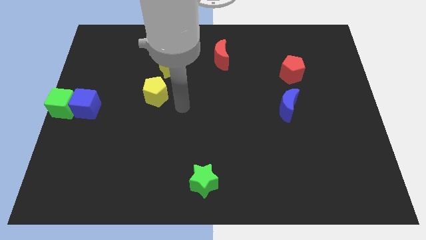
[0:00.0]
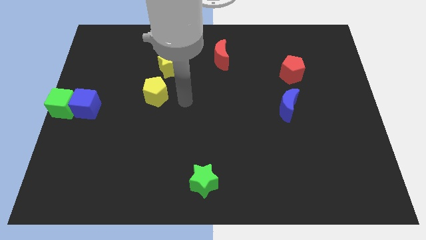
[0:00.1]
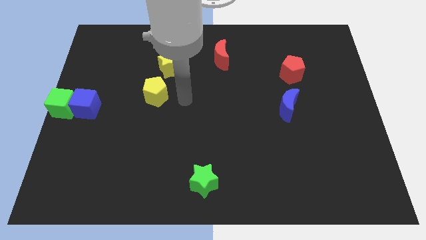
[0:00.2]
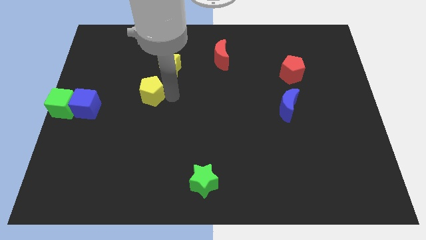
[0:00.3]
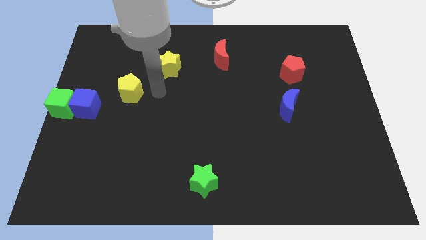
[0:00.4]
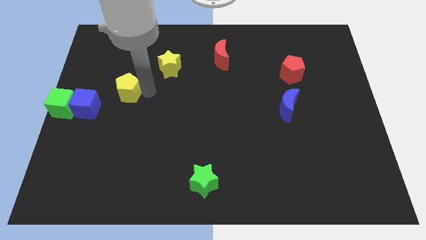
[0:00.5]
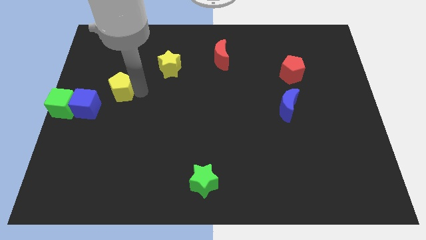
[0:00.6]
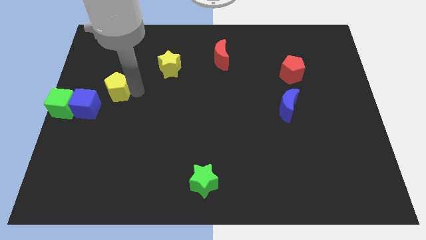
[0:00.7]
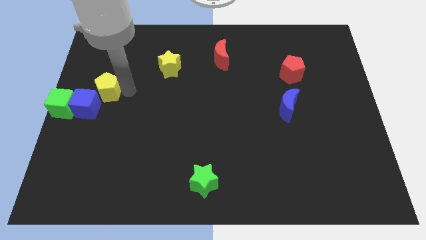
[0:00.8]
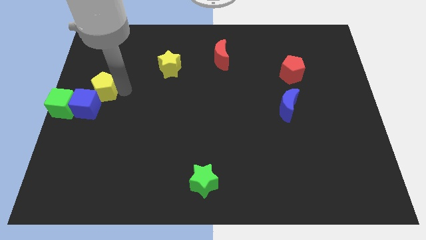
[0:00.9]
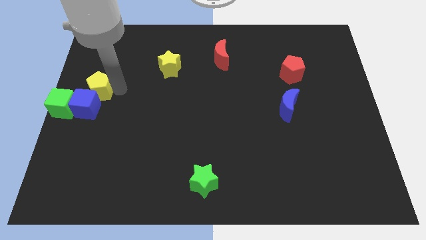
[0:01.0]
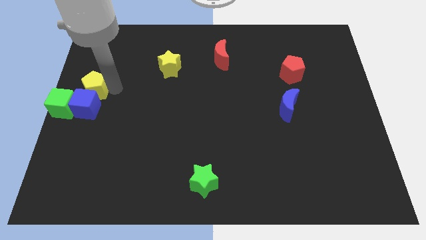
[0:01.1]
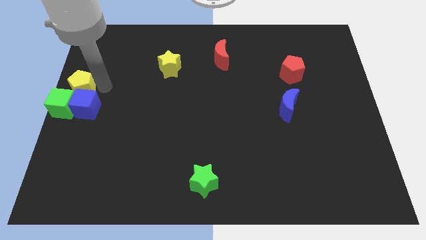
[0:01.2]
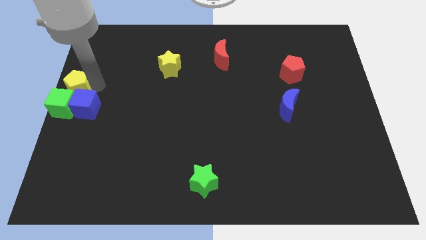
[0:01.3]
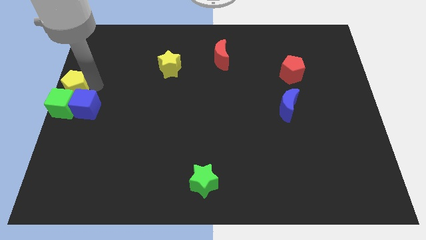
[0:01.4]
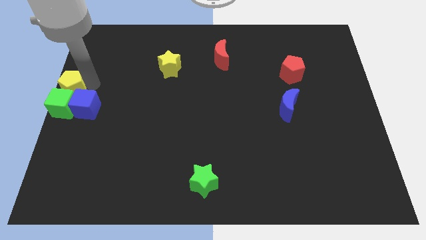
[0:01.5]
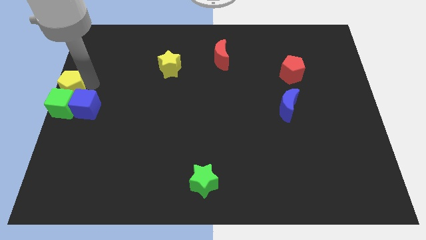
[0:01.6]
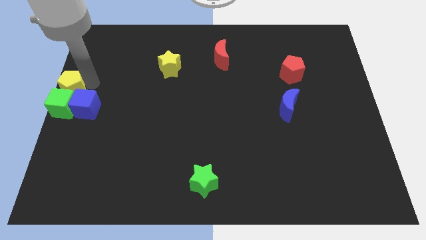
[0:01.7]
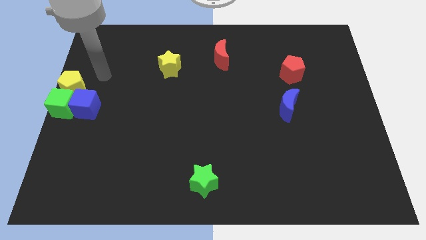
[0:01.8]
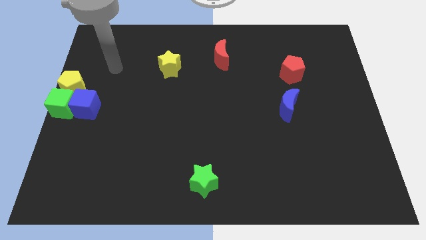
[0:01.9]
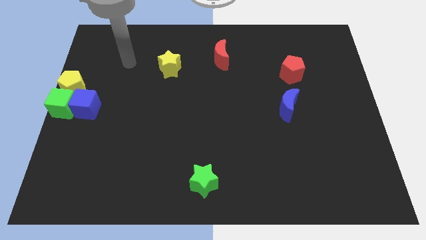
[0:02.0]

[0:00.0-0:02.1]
put the yellow pentagon above the green cube

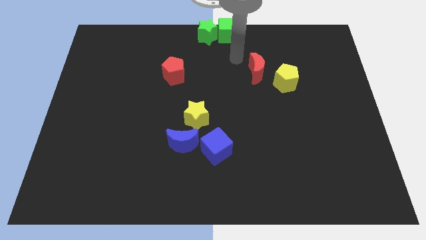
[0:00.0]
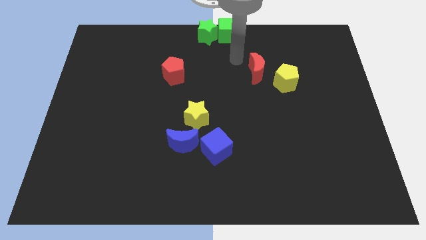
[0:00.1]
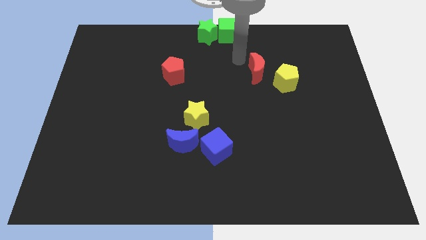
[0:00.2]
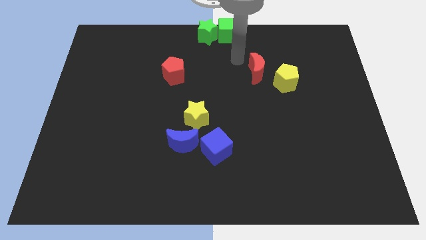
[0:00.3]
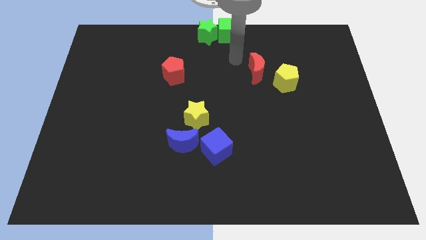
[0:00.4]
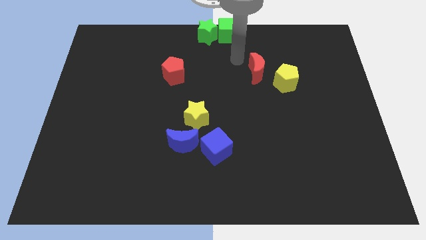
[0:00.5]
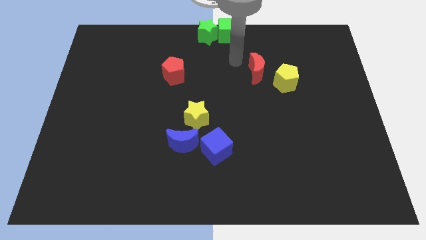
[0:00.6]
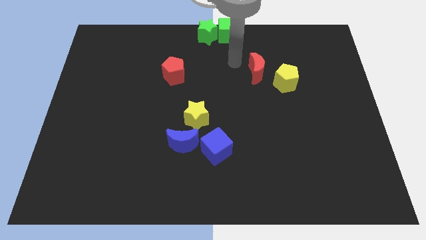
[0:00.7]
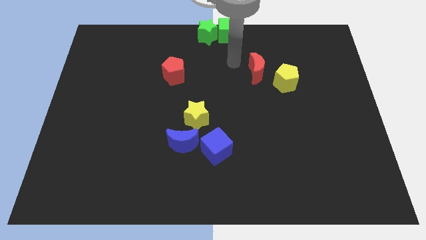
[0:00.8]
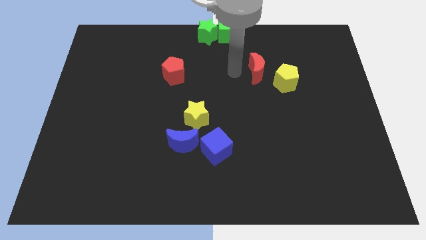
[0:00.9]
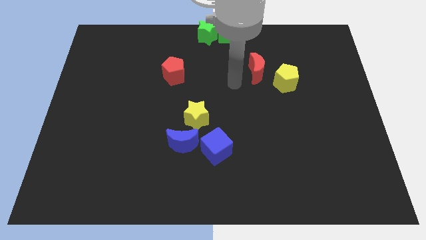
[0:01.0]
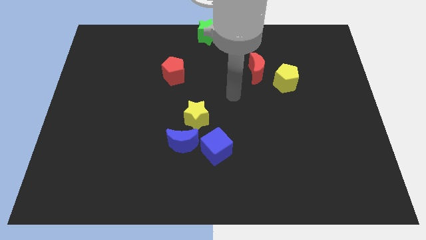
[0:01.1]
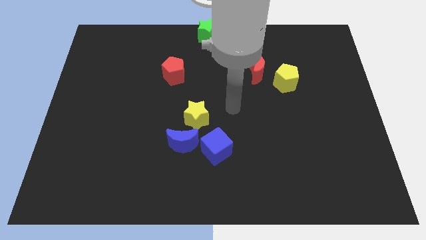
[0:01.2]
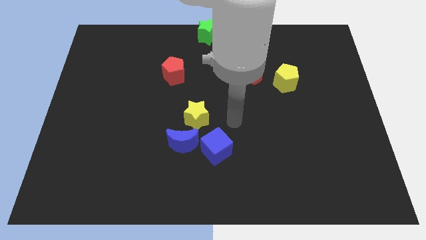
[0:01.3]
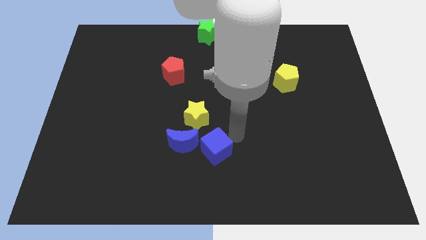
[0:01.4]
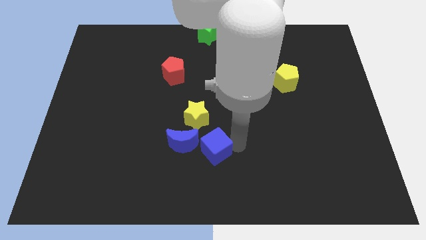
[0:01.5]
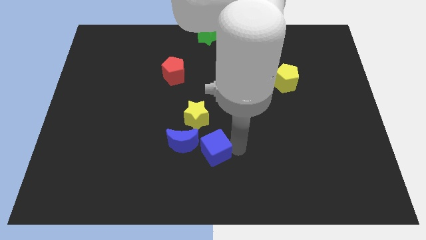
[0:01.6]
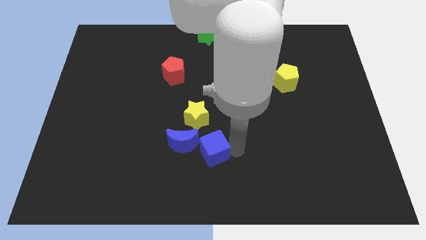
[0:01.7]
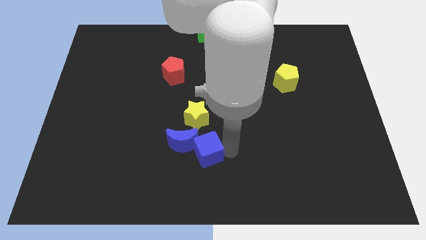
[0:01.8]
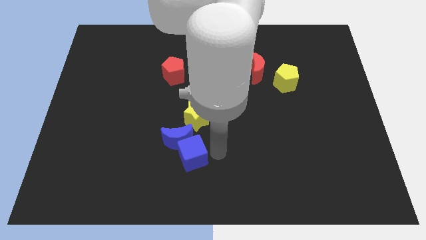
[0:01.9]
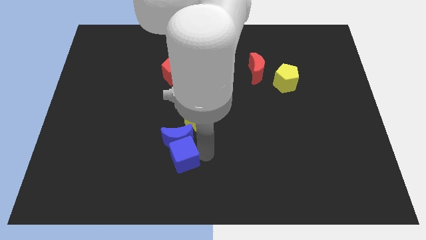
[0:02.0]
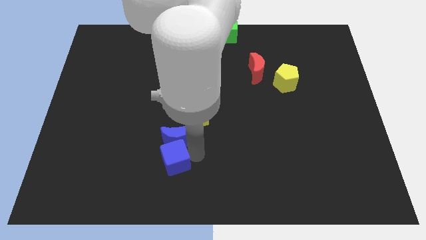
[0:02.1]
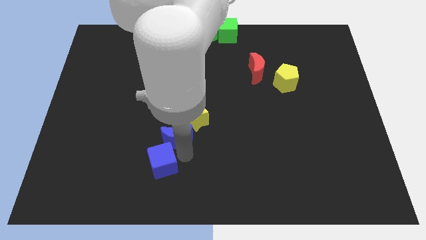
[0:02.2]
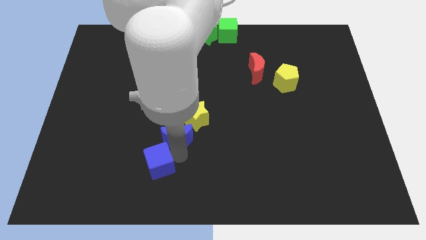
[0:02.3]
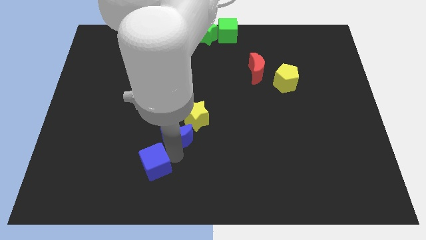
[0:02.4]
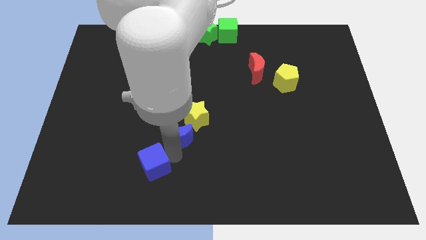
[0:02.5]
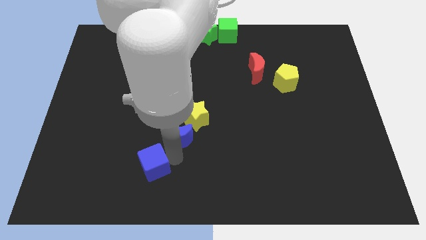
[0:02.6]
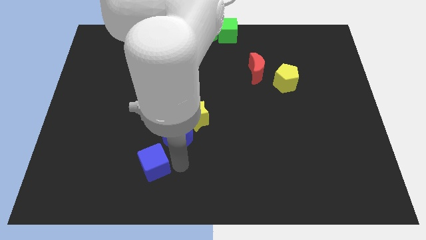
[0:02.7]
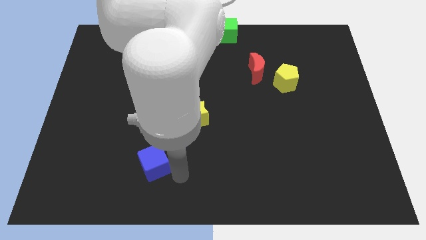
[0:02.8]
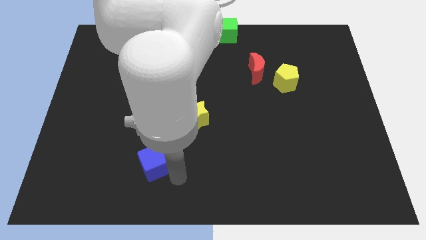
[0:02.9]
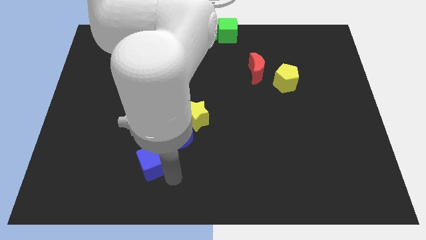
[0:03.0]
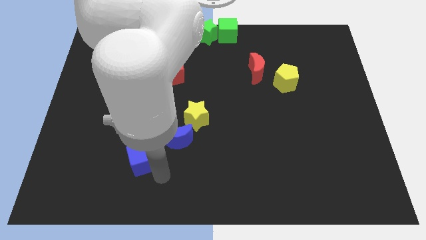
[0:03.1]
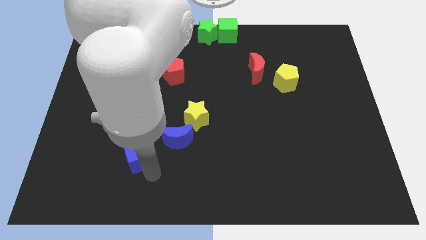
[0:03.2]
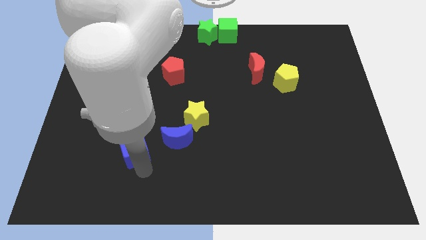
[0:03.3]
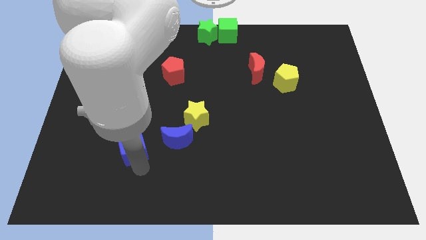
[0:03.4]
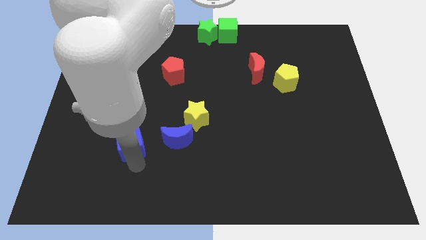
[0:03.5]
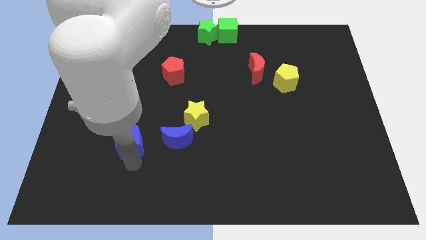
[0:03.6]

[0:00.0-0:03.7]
move the blue cube away from the blue crescent

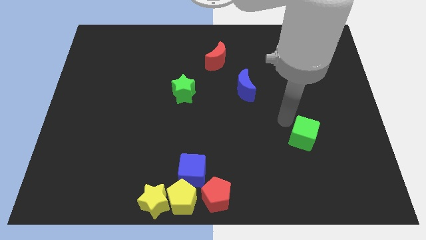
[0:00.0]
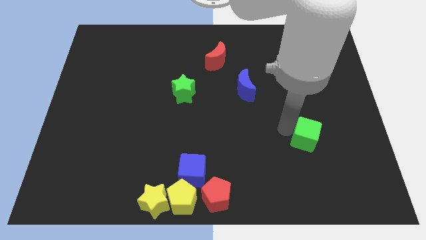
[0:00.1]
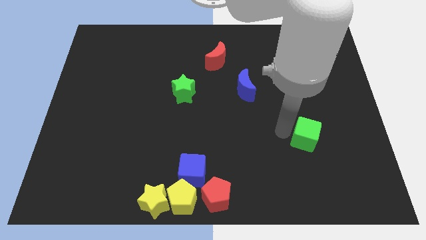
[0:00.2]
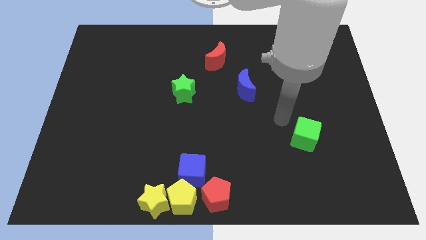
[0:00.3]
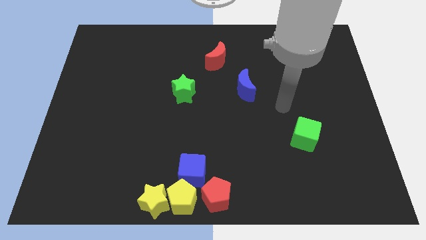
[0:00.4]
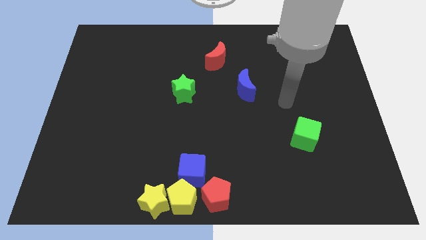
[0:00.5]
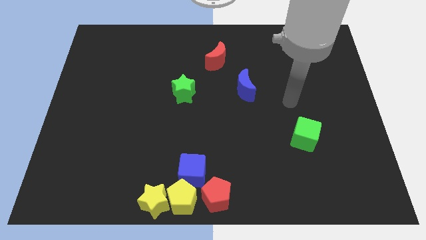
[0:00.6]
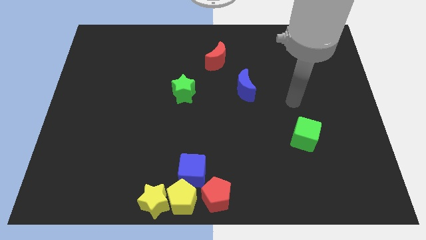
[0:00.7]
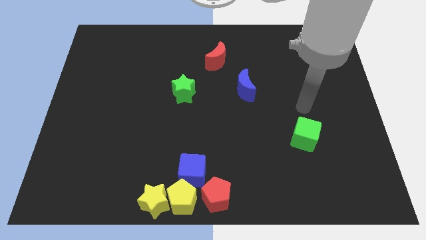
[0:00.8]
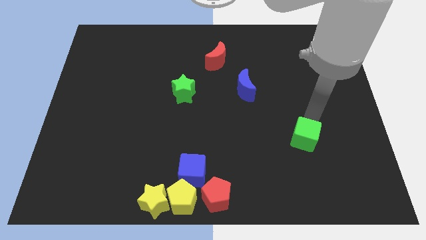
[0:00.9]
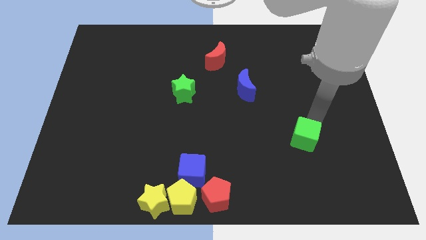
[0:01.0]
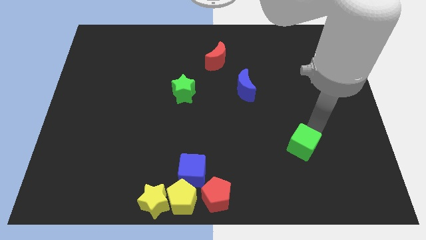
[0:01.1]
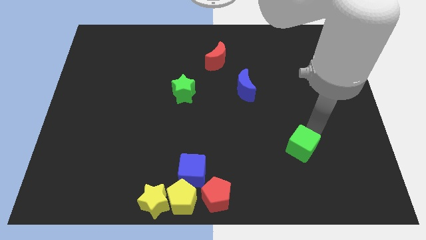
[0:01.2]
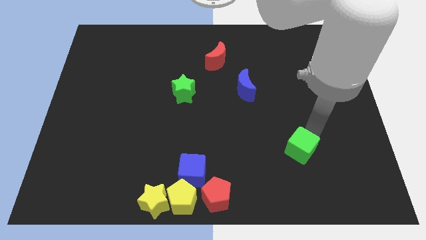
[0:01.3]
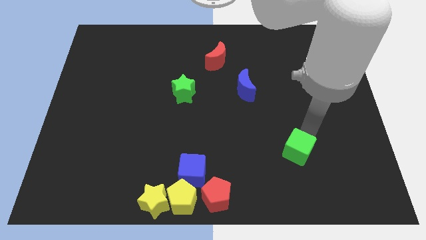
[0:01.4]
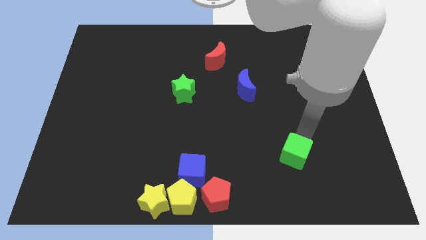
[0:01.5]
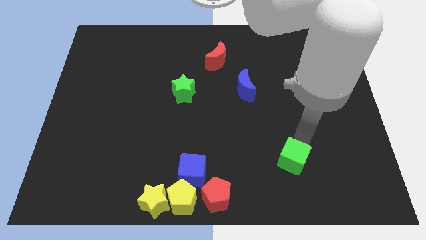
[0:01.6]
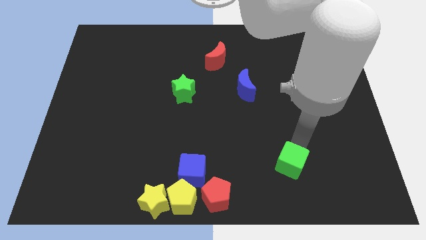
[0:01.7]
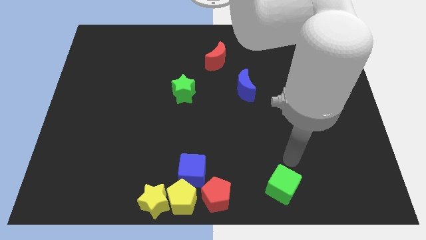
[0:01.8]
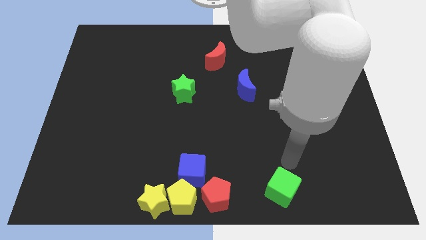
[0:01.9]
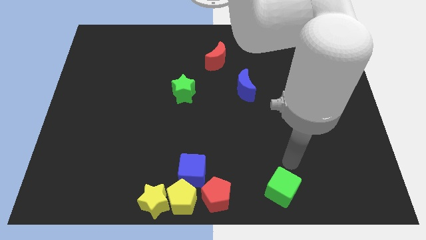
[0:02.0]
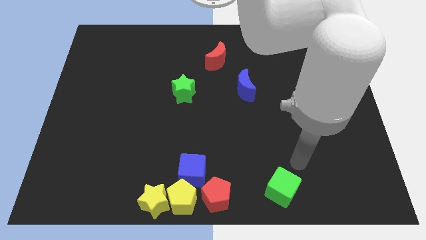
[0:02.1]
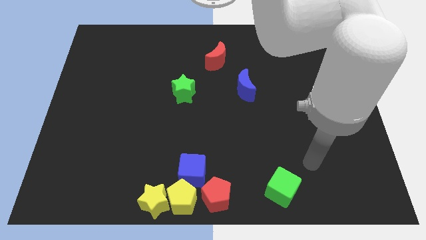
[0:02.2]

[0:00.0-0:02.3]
place the green cube to the right of the red pentagon

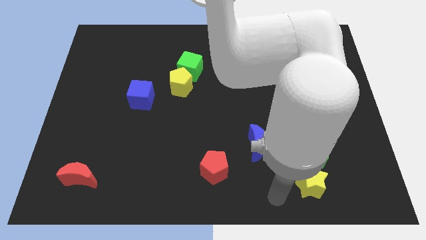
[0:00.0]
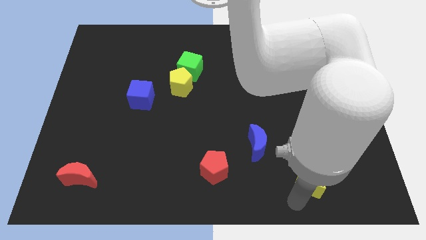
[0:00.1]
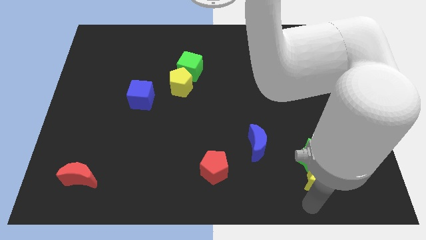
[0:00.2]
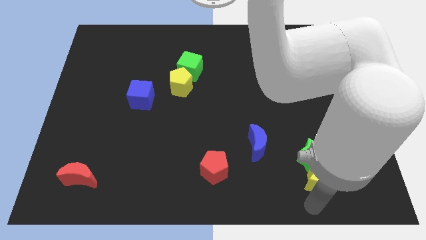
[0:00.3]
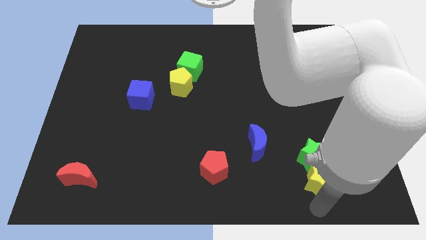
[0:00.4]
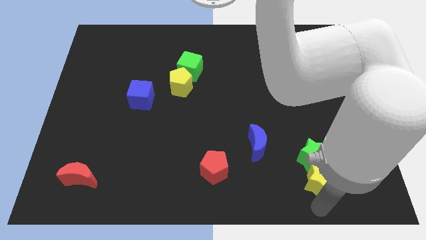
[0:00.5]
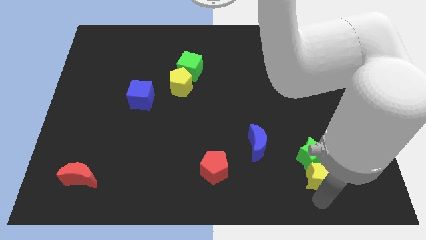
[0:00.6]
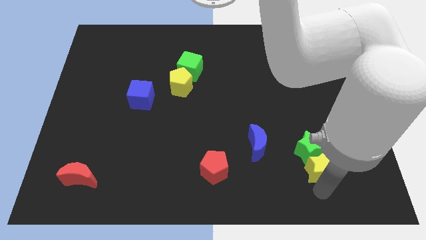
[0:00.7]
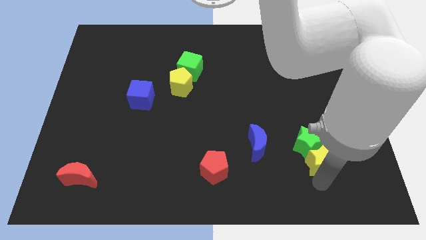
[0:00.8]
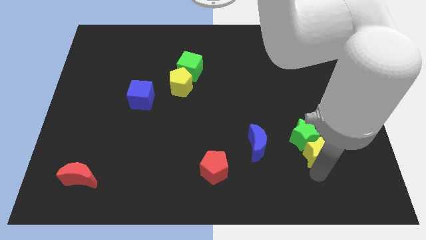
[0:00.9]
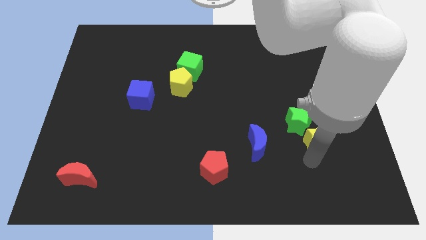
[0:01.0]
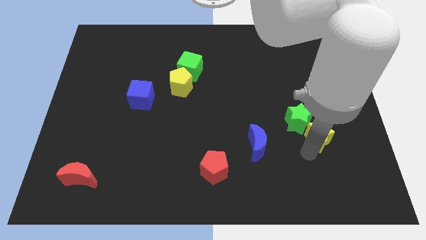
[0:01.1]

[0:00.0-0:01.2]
slide yellow star into green star
